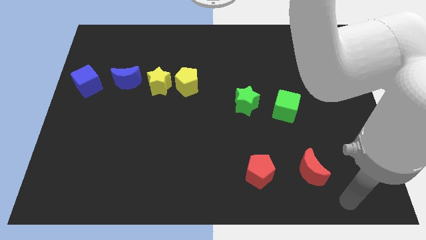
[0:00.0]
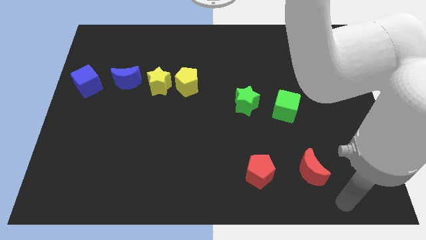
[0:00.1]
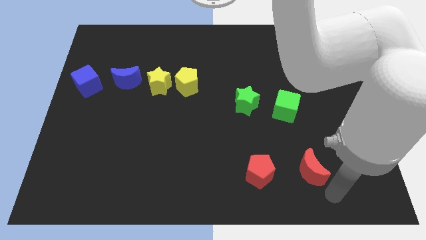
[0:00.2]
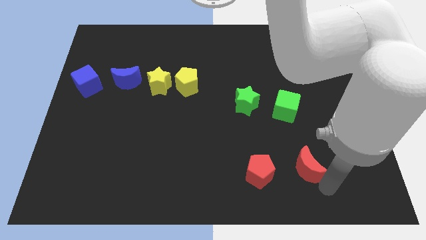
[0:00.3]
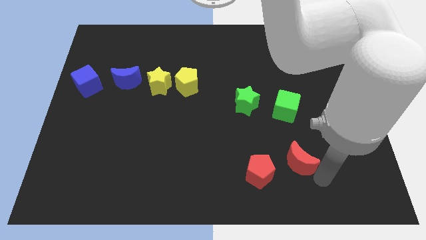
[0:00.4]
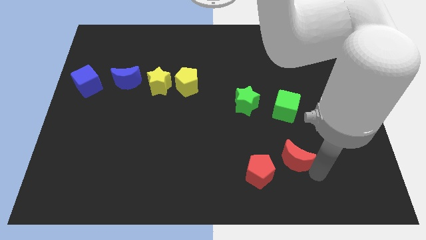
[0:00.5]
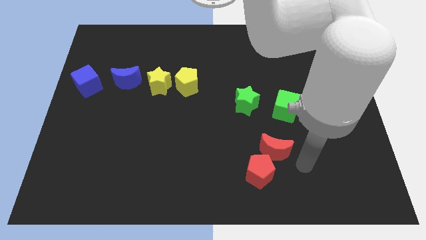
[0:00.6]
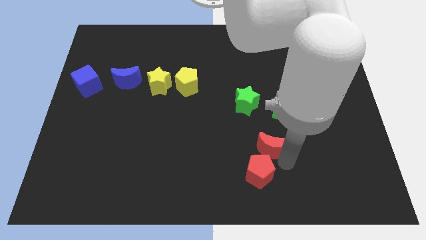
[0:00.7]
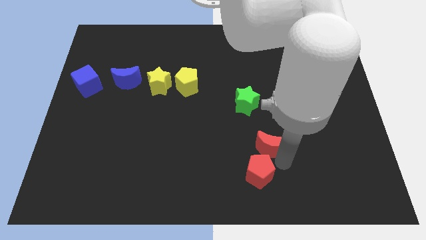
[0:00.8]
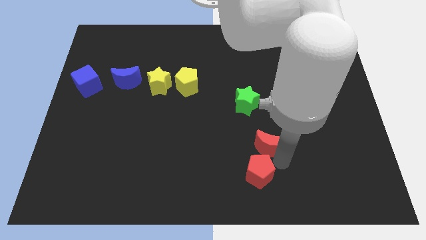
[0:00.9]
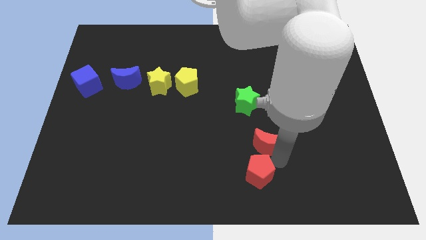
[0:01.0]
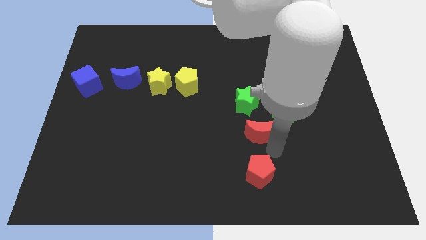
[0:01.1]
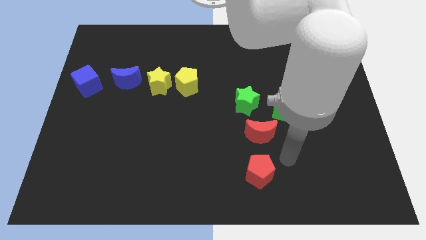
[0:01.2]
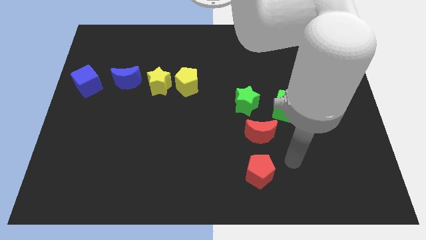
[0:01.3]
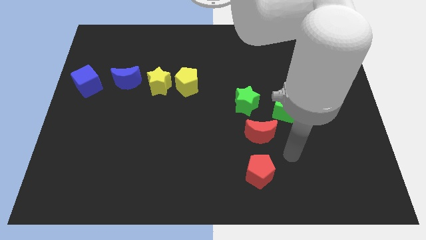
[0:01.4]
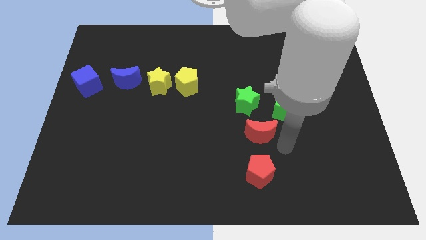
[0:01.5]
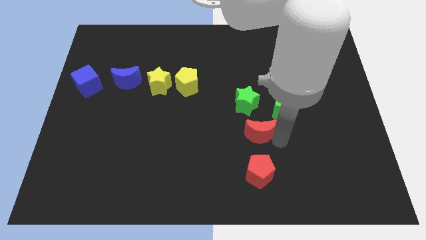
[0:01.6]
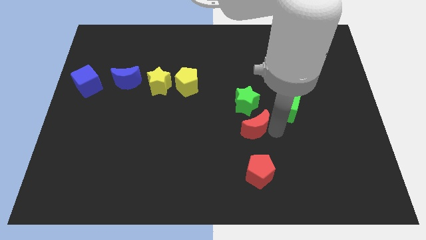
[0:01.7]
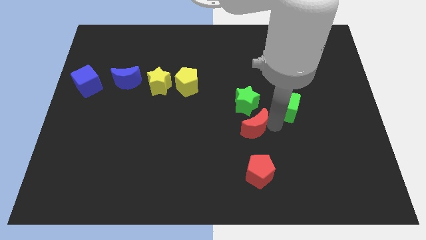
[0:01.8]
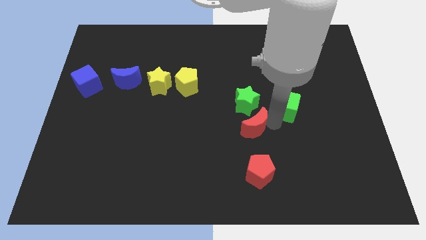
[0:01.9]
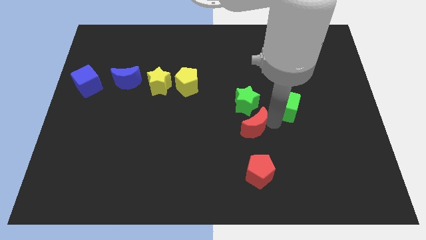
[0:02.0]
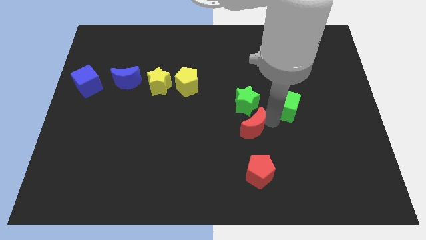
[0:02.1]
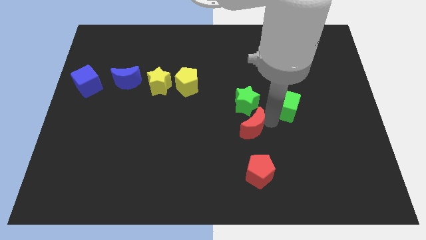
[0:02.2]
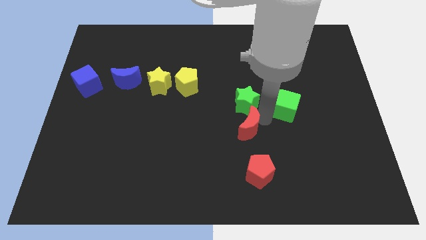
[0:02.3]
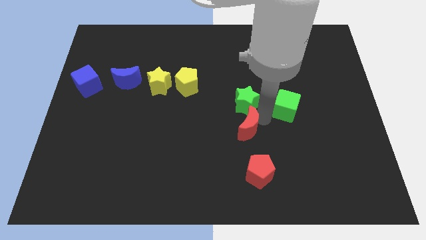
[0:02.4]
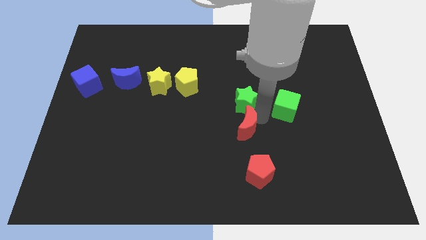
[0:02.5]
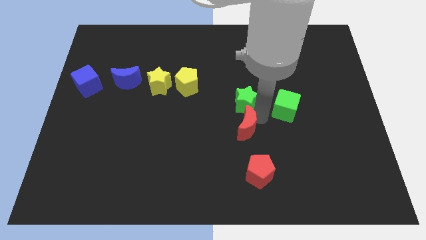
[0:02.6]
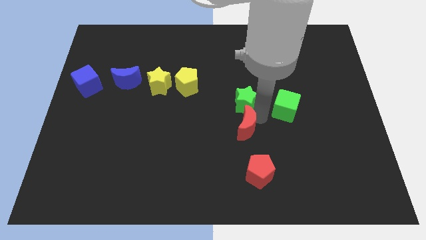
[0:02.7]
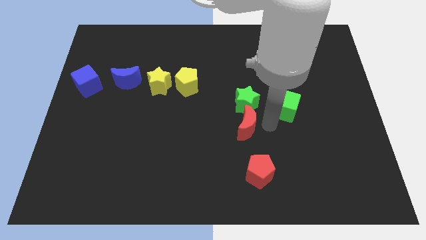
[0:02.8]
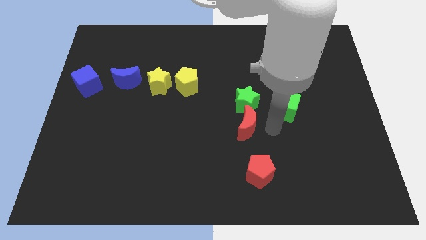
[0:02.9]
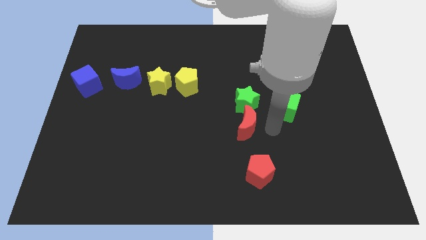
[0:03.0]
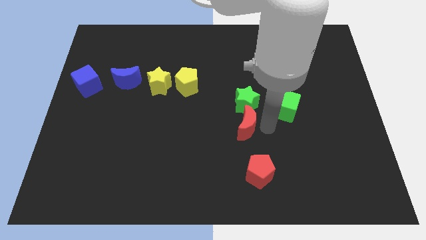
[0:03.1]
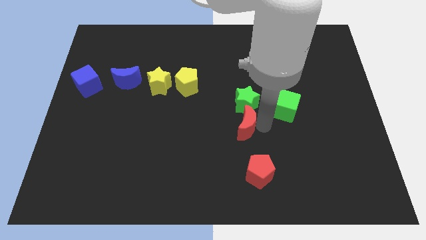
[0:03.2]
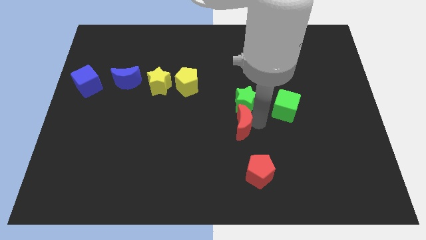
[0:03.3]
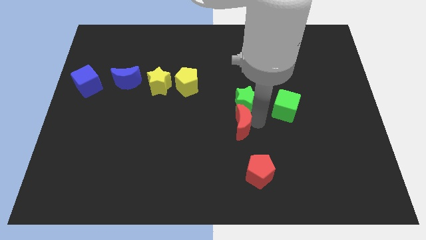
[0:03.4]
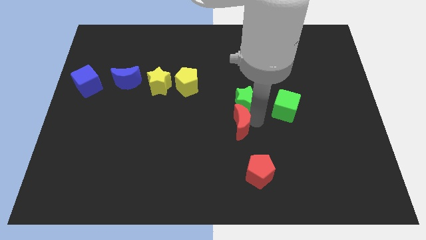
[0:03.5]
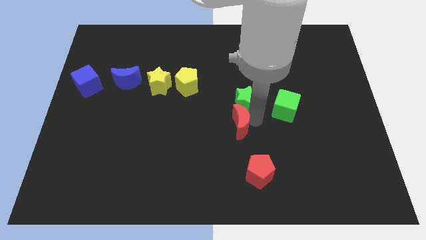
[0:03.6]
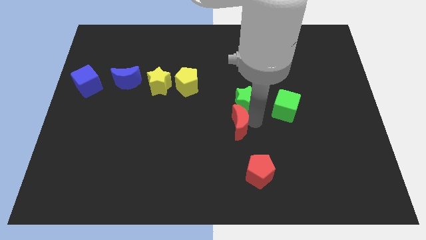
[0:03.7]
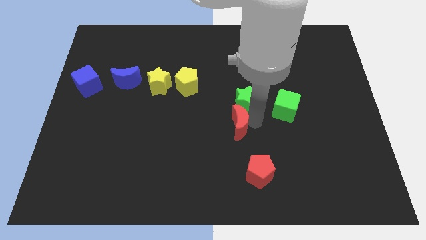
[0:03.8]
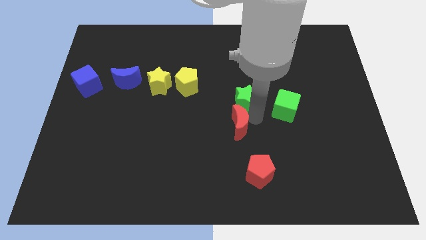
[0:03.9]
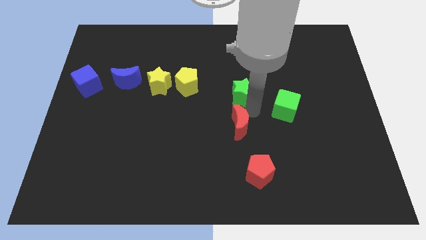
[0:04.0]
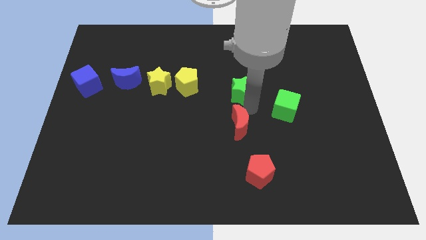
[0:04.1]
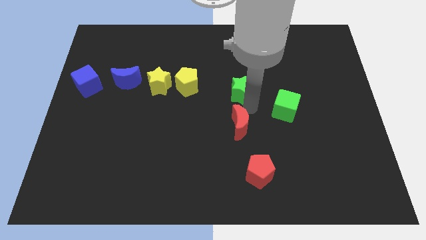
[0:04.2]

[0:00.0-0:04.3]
move the red crescent to the bottom of the green star

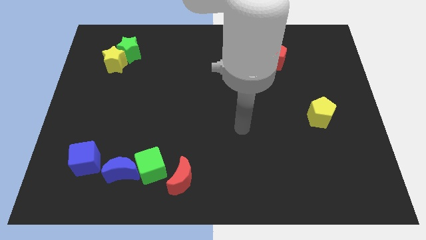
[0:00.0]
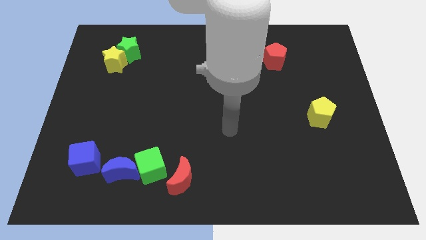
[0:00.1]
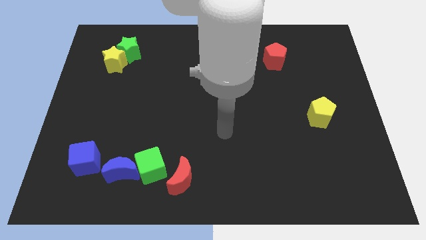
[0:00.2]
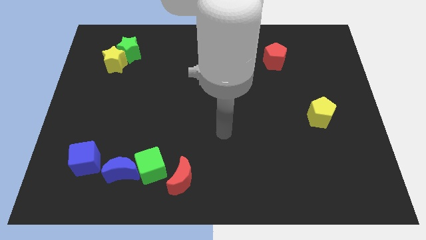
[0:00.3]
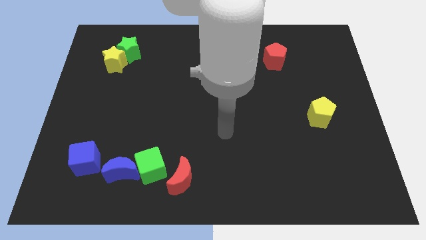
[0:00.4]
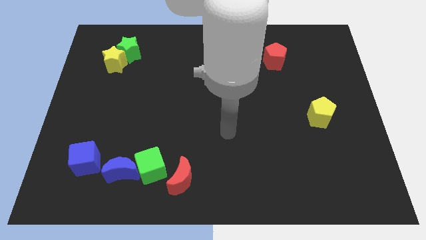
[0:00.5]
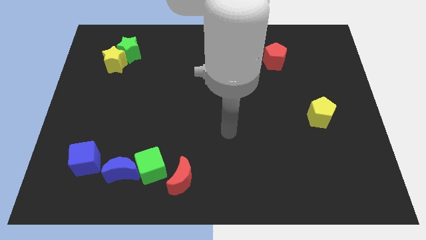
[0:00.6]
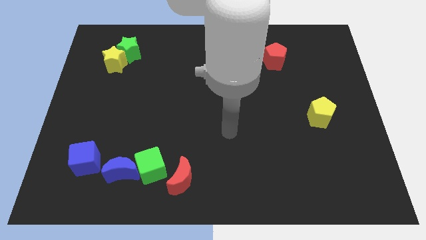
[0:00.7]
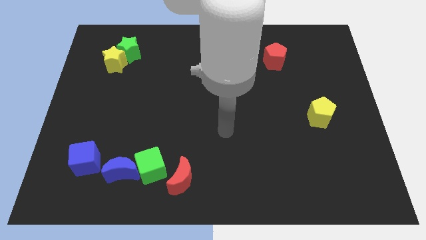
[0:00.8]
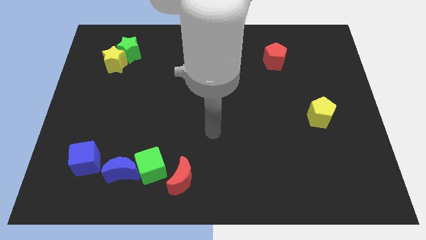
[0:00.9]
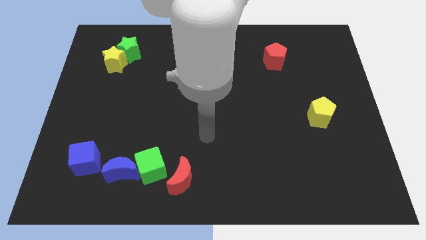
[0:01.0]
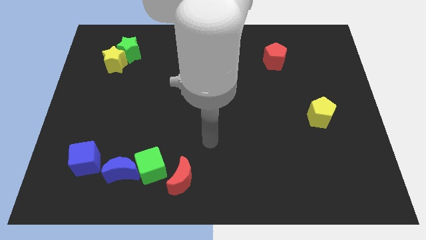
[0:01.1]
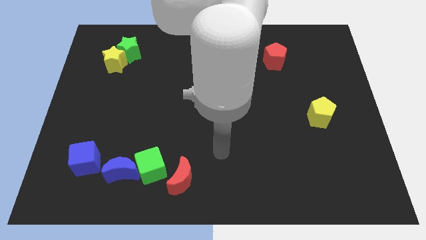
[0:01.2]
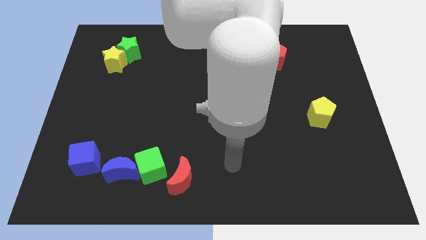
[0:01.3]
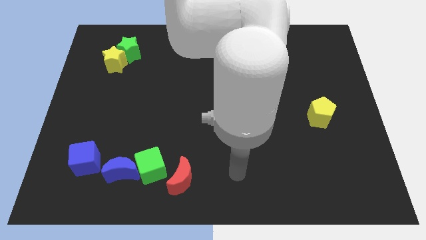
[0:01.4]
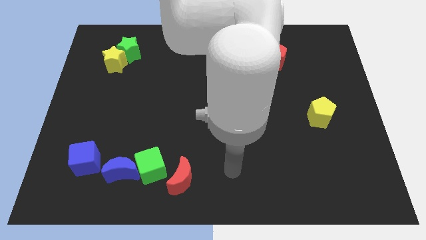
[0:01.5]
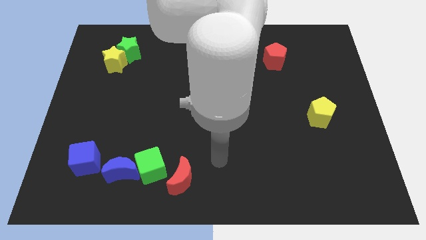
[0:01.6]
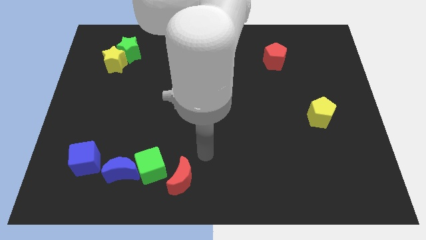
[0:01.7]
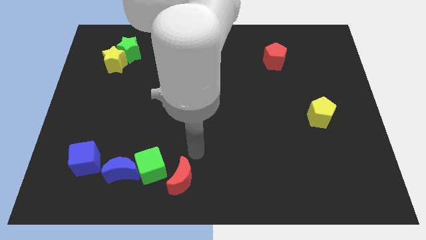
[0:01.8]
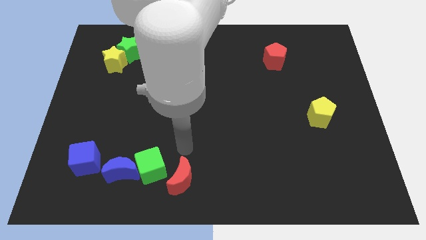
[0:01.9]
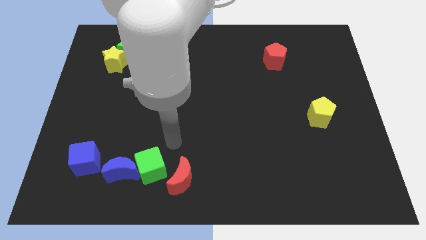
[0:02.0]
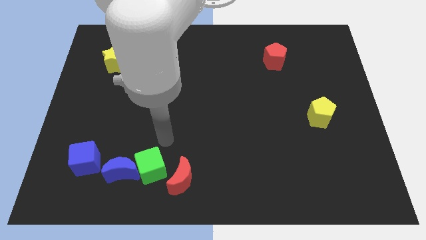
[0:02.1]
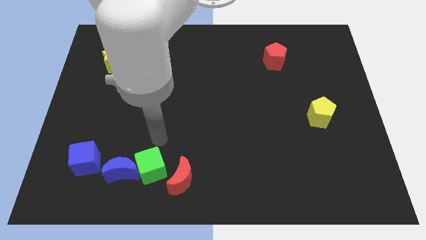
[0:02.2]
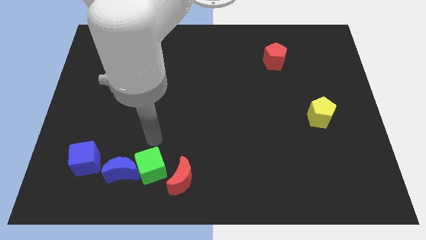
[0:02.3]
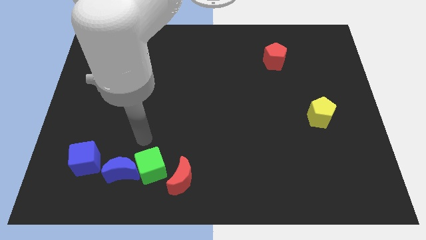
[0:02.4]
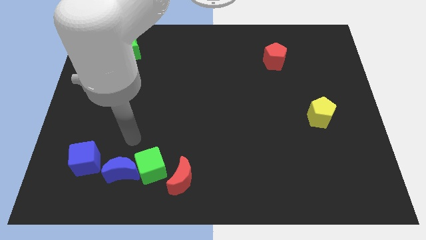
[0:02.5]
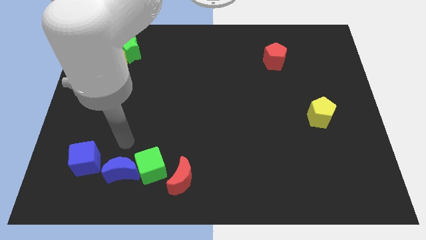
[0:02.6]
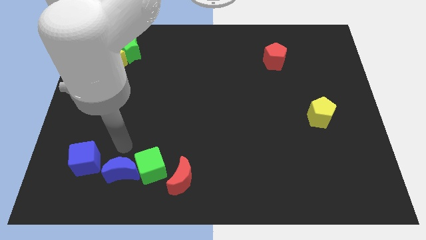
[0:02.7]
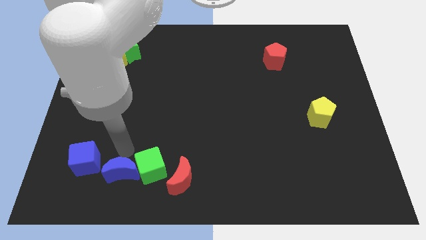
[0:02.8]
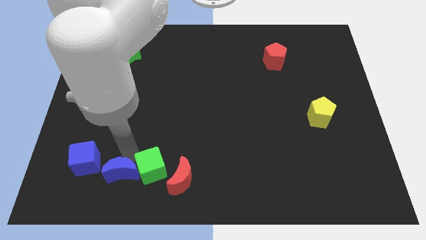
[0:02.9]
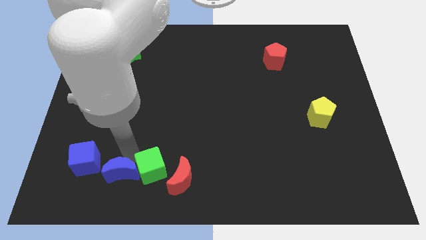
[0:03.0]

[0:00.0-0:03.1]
move your arm to the green cube

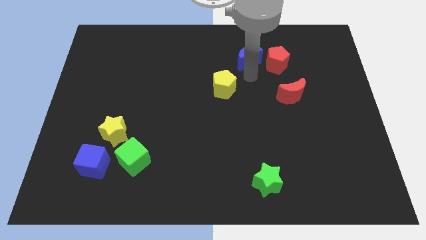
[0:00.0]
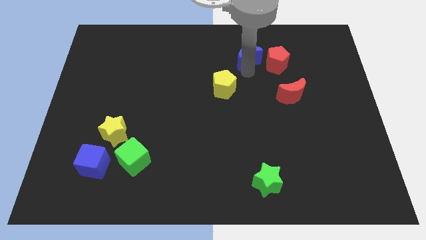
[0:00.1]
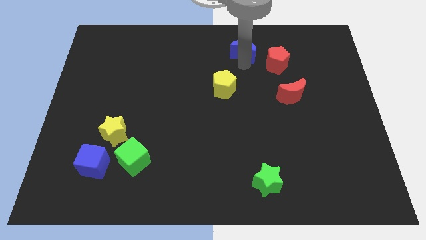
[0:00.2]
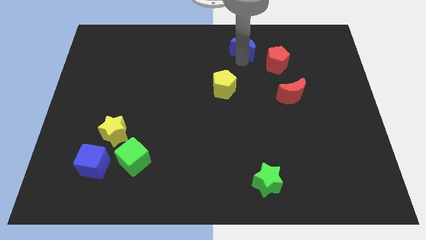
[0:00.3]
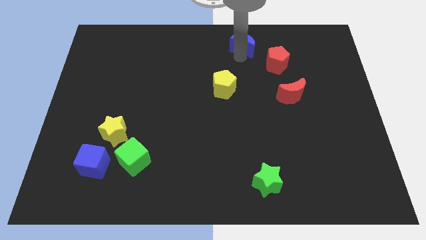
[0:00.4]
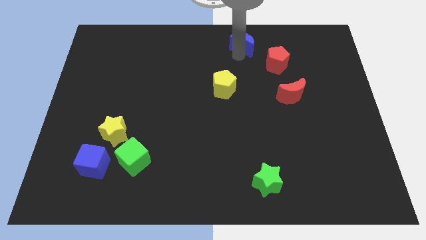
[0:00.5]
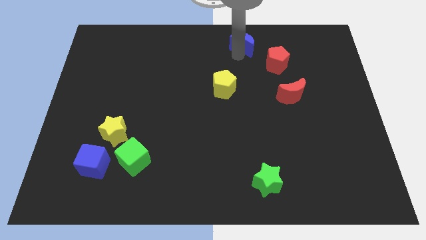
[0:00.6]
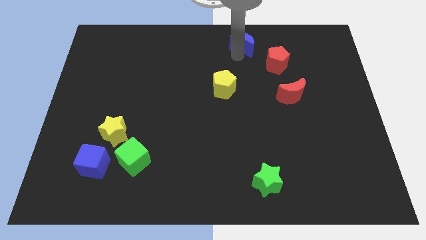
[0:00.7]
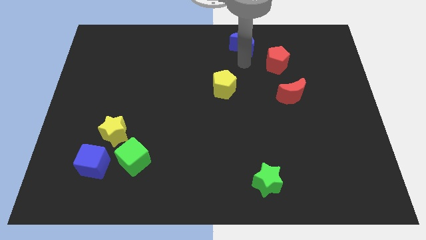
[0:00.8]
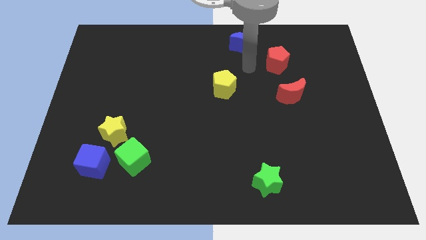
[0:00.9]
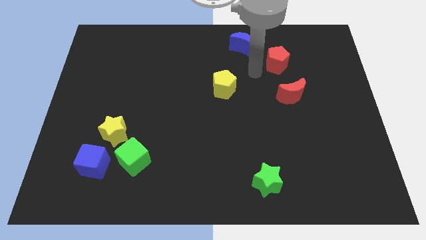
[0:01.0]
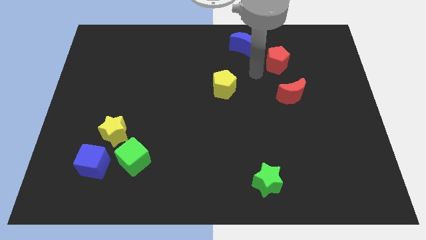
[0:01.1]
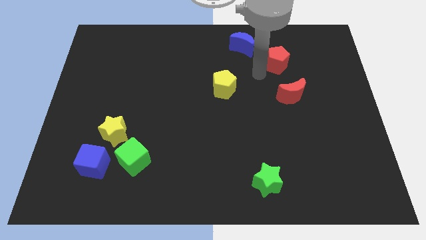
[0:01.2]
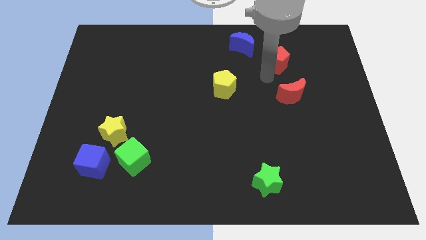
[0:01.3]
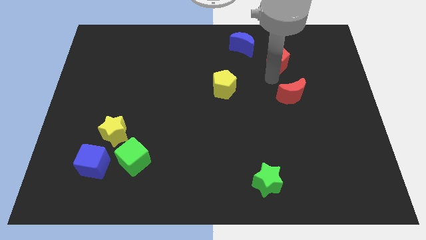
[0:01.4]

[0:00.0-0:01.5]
push the blue moon up slightly

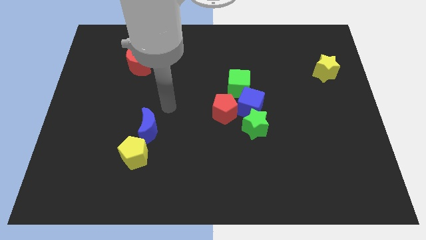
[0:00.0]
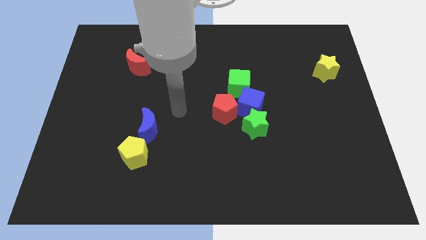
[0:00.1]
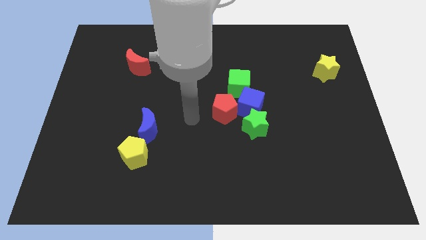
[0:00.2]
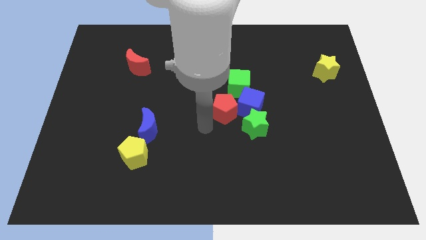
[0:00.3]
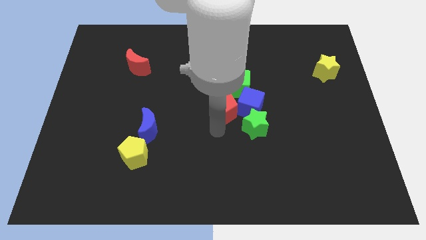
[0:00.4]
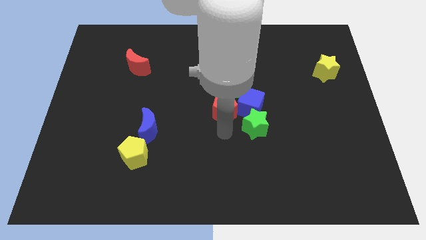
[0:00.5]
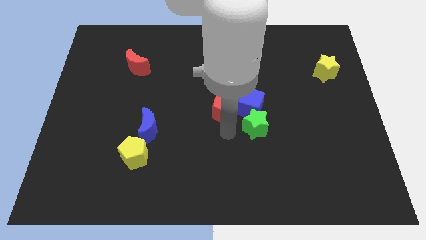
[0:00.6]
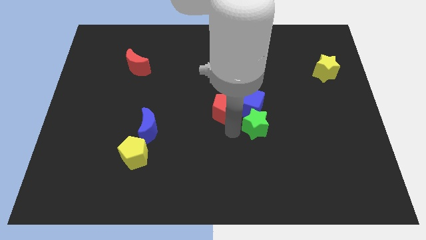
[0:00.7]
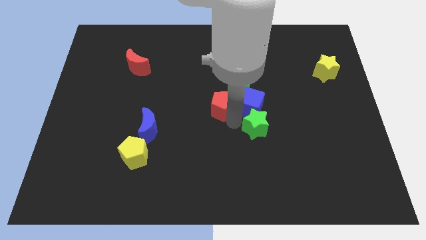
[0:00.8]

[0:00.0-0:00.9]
place the arm down to the red pentagon
